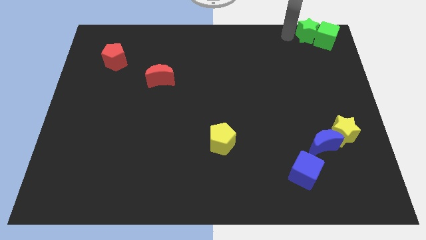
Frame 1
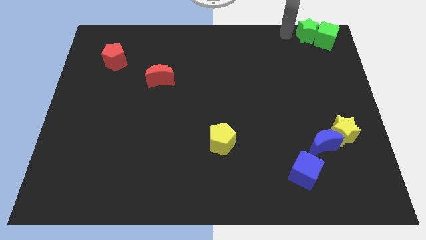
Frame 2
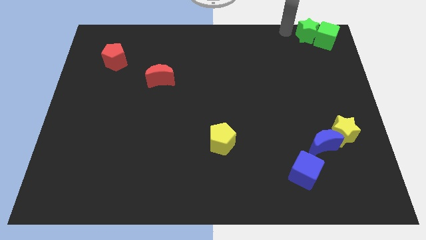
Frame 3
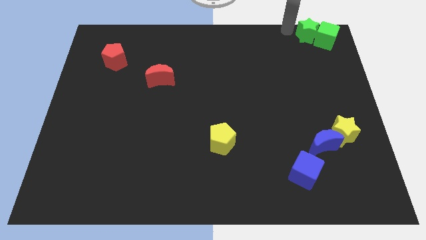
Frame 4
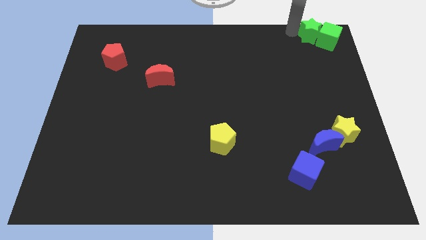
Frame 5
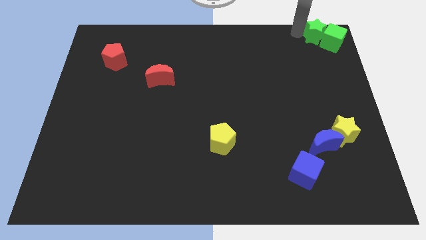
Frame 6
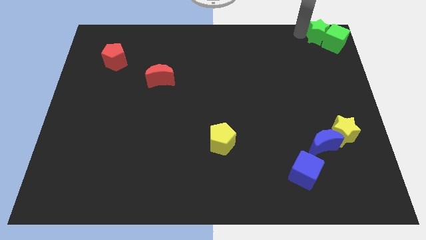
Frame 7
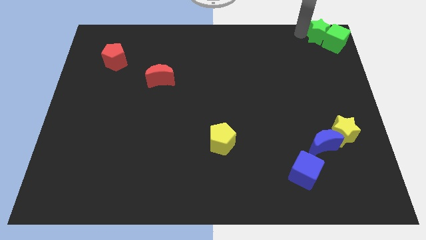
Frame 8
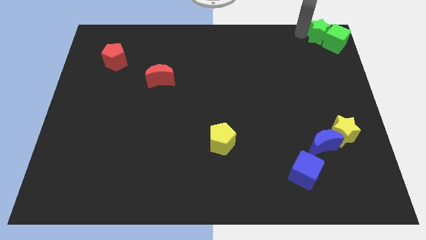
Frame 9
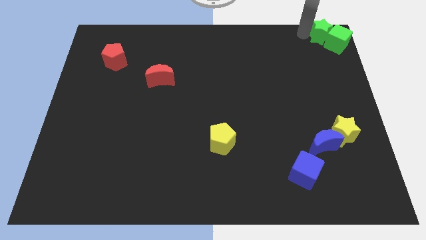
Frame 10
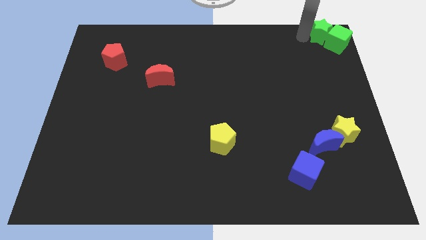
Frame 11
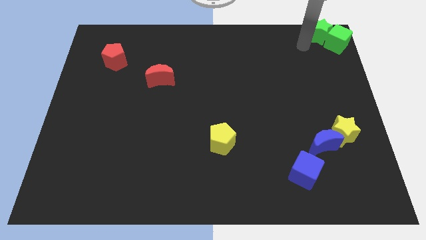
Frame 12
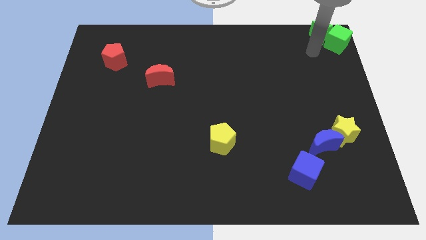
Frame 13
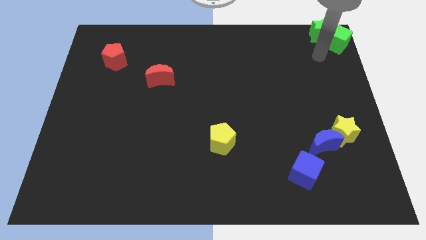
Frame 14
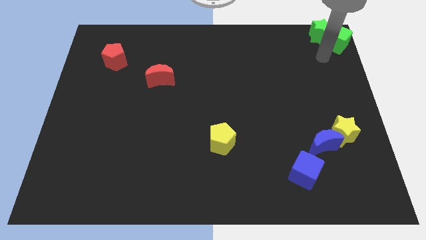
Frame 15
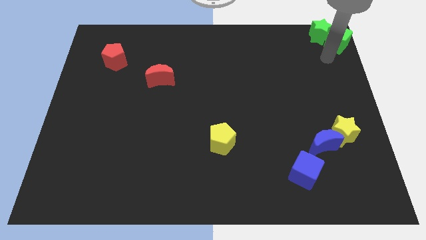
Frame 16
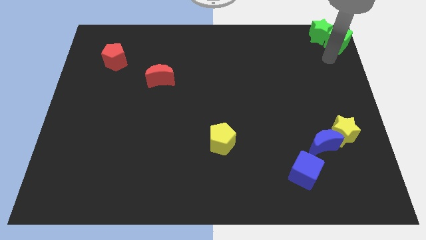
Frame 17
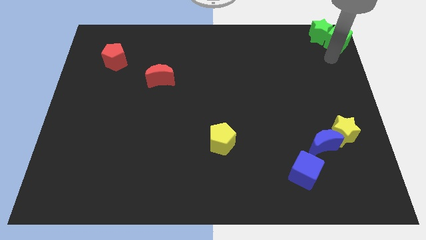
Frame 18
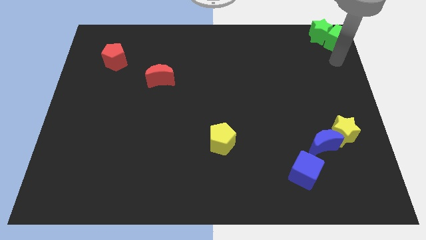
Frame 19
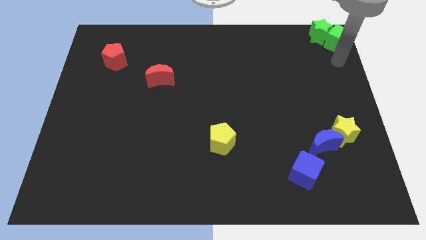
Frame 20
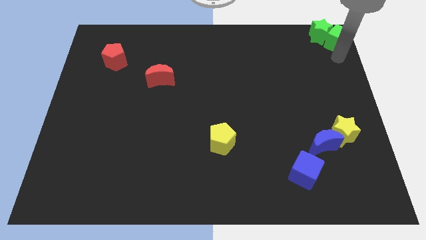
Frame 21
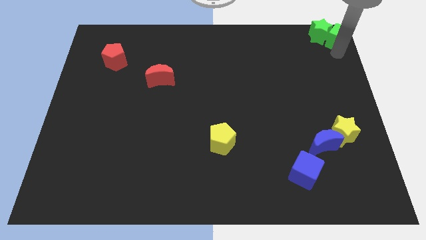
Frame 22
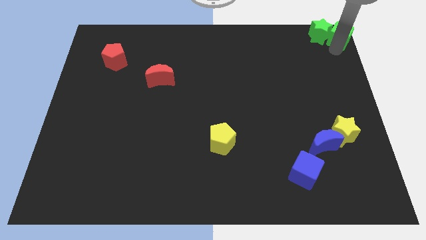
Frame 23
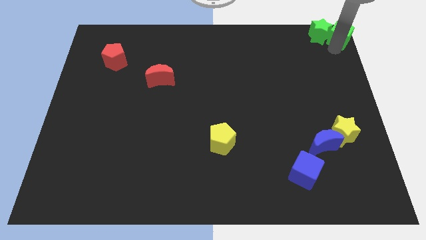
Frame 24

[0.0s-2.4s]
push the green blocks to the top right corner of the board

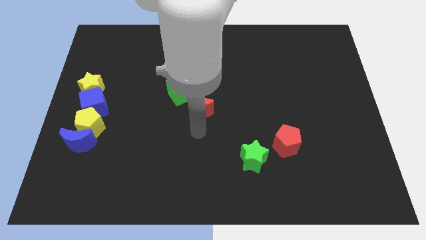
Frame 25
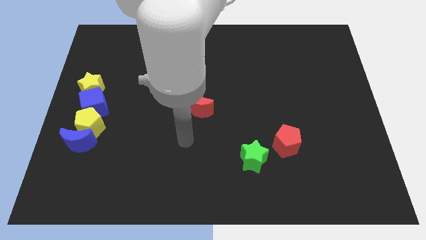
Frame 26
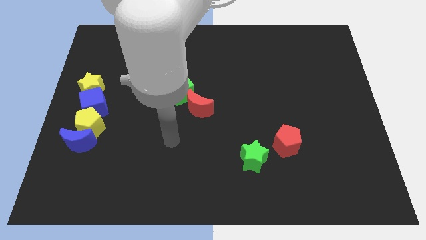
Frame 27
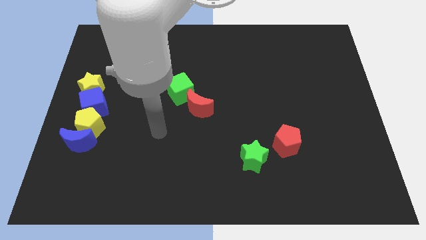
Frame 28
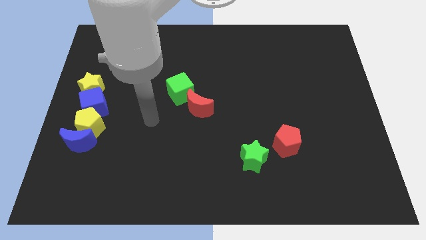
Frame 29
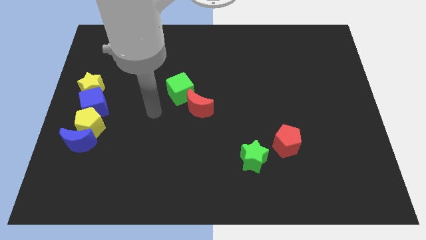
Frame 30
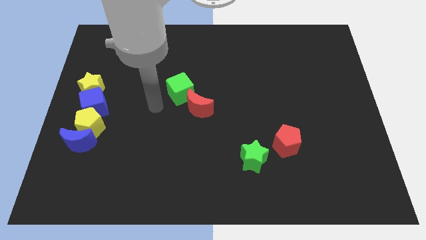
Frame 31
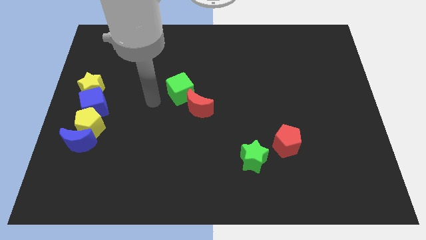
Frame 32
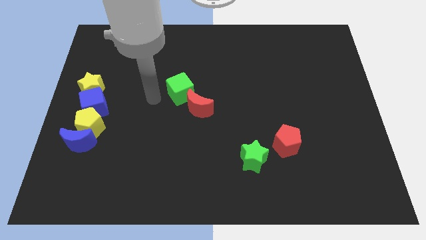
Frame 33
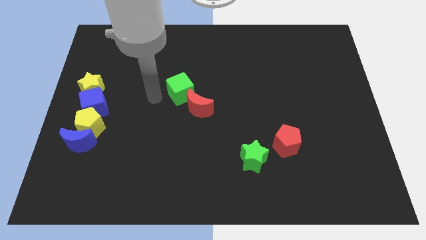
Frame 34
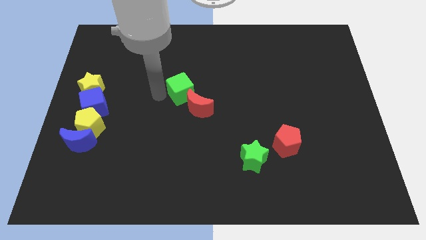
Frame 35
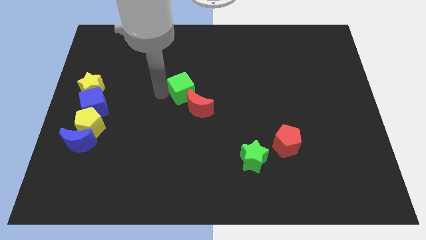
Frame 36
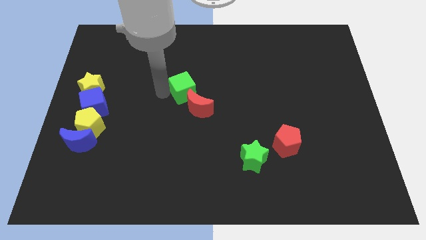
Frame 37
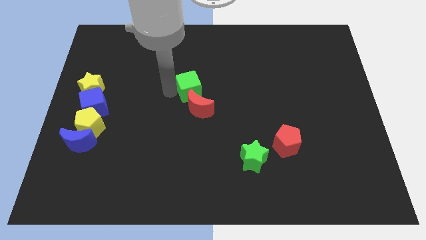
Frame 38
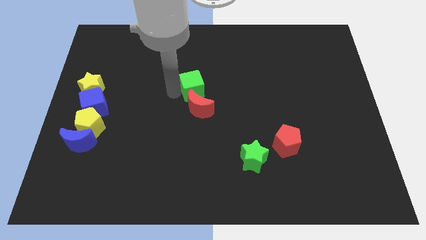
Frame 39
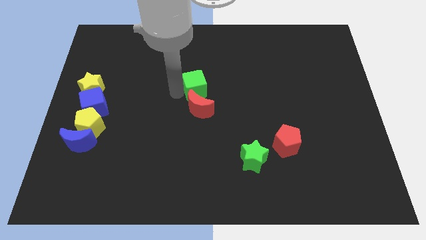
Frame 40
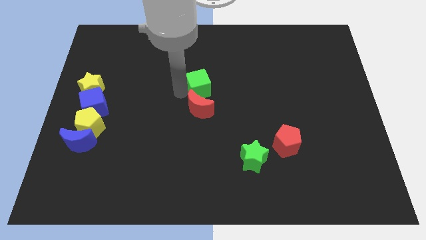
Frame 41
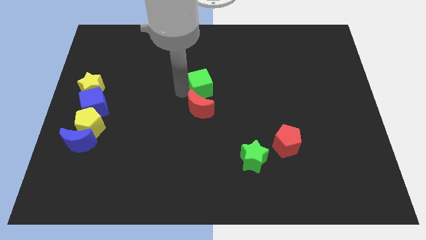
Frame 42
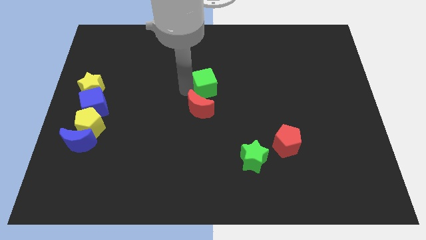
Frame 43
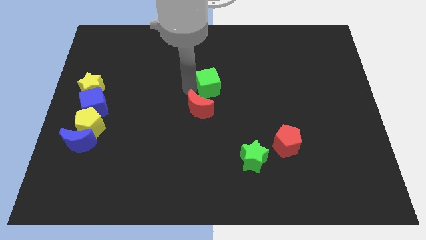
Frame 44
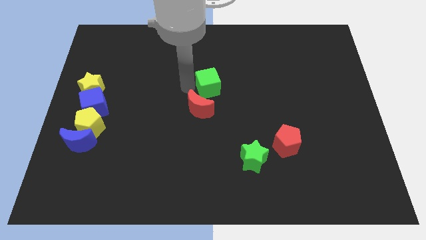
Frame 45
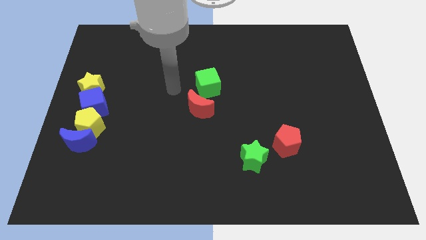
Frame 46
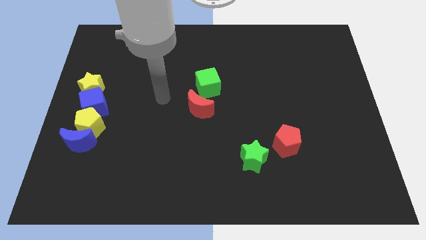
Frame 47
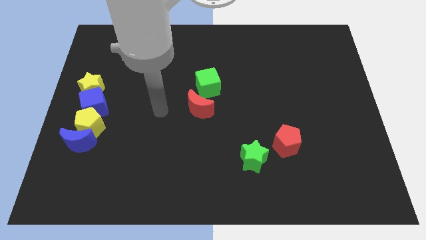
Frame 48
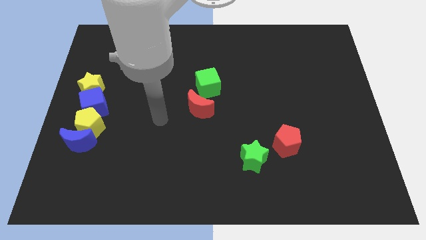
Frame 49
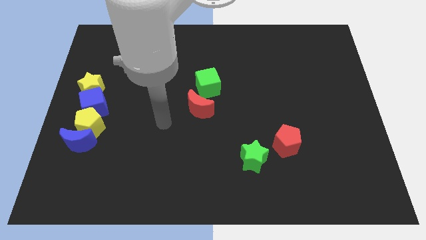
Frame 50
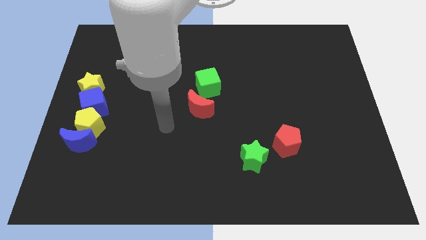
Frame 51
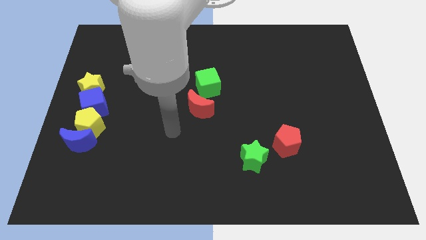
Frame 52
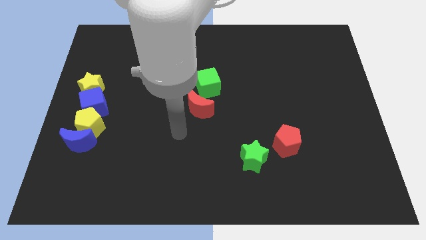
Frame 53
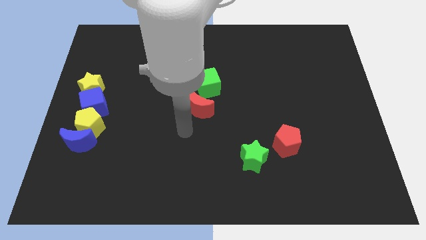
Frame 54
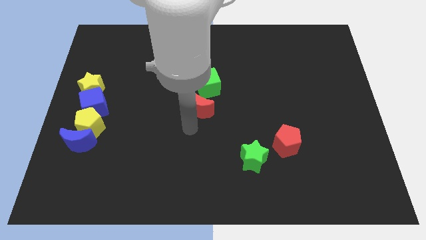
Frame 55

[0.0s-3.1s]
slide the green cube slightly towards the center

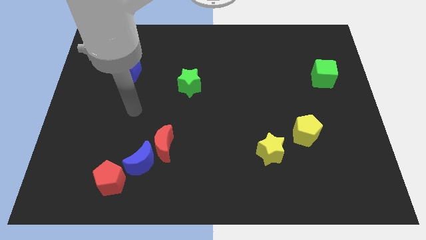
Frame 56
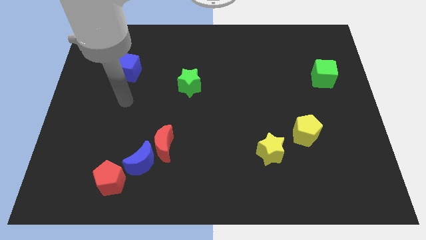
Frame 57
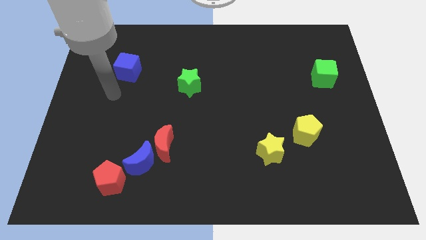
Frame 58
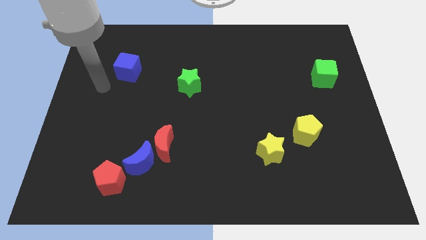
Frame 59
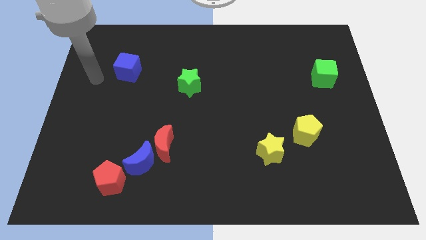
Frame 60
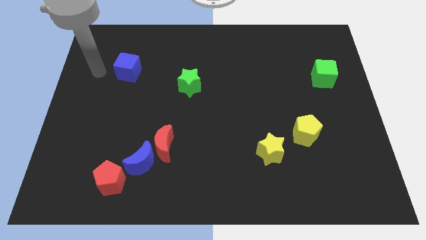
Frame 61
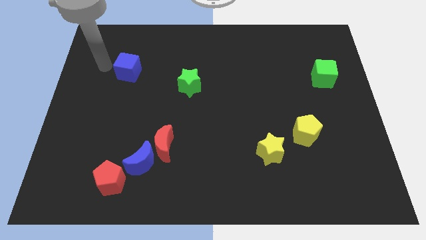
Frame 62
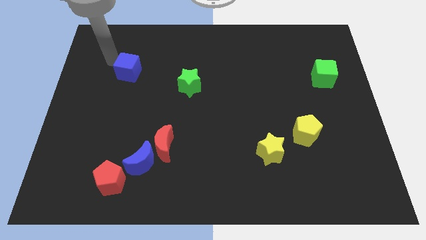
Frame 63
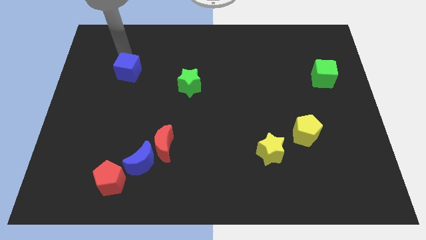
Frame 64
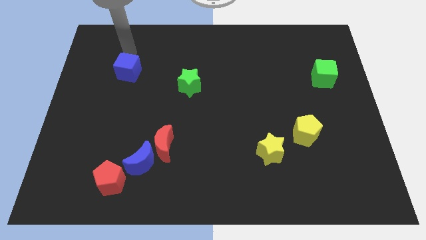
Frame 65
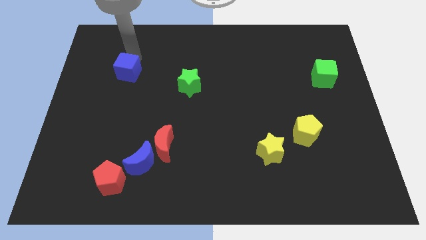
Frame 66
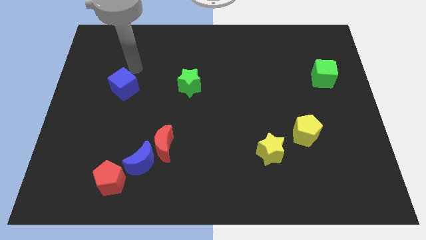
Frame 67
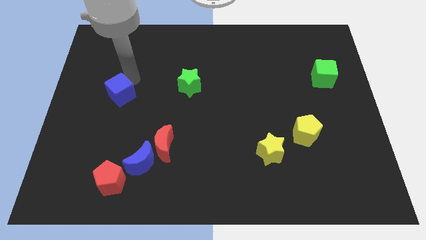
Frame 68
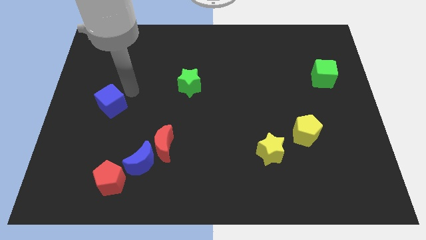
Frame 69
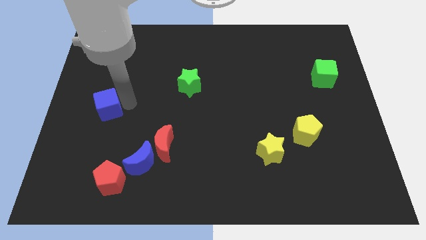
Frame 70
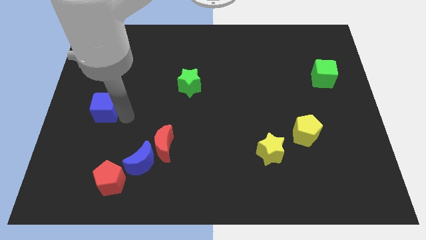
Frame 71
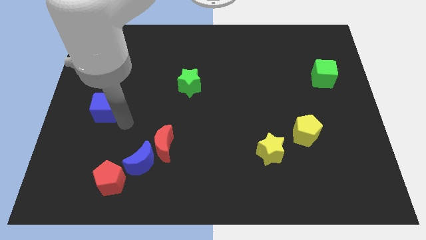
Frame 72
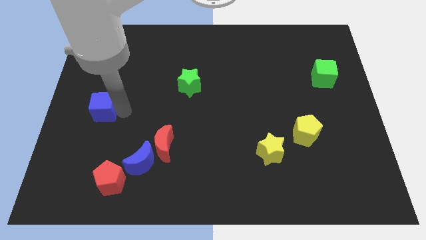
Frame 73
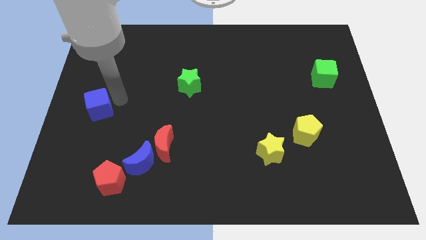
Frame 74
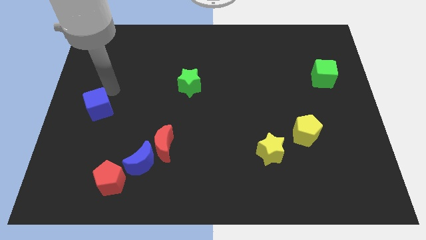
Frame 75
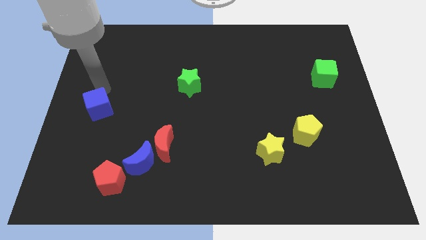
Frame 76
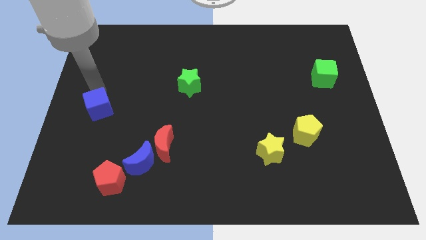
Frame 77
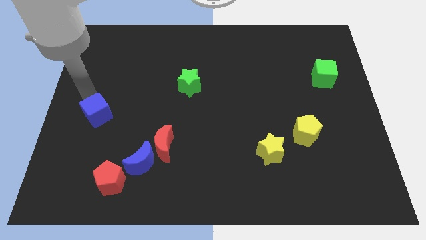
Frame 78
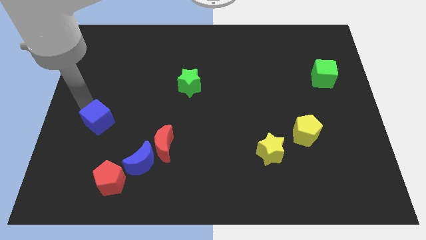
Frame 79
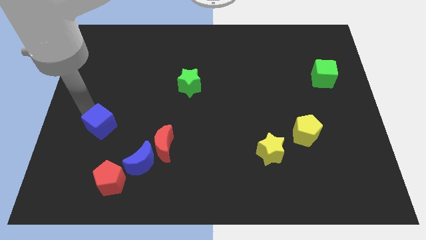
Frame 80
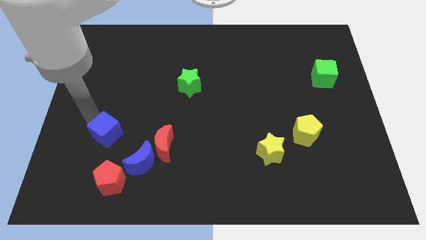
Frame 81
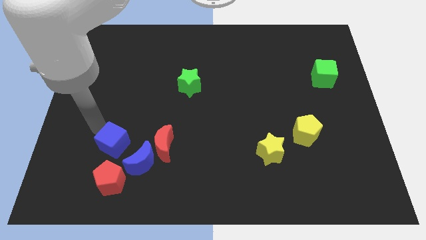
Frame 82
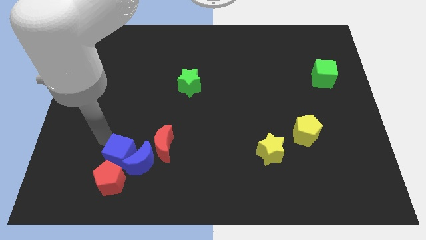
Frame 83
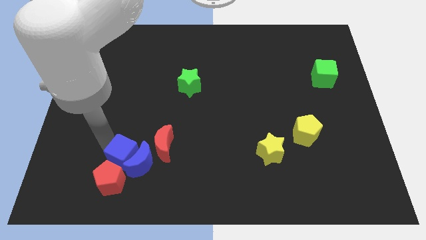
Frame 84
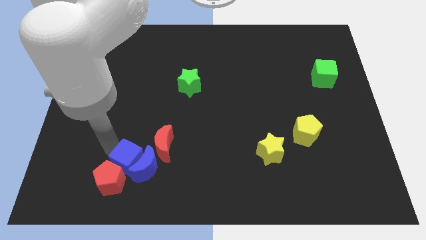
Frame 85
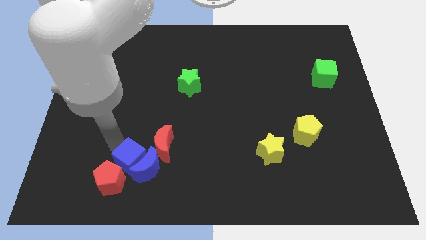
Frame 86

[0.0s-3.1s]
slide the blue cube into the blue moon

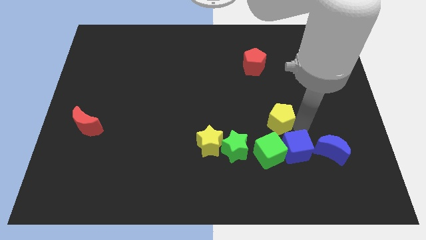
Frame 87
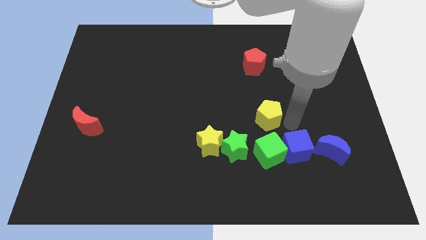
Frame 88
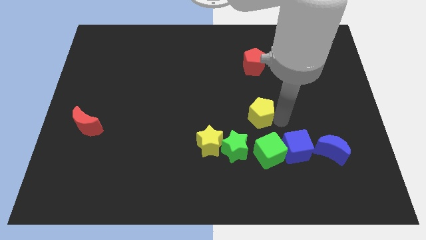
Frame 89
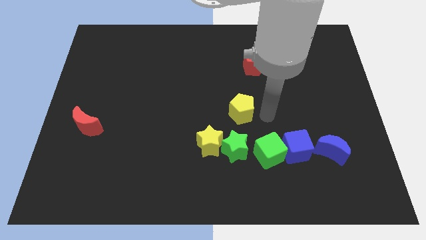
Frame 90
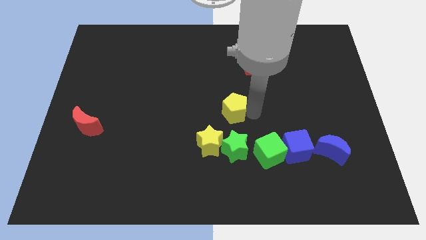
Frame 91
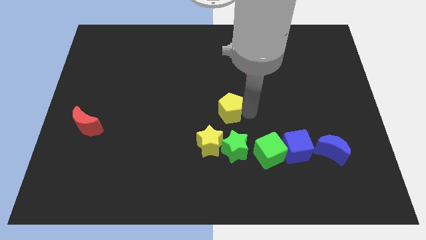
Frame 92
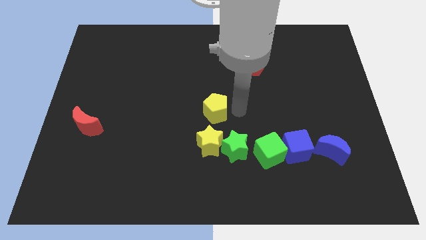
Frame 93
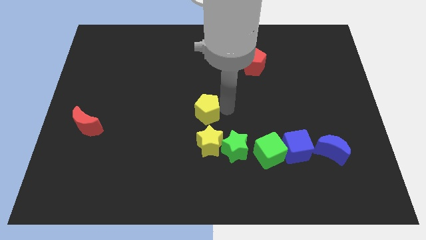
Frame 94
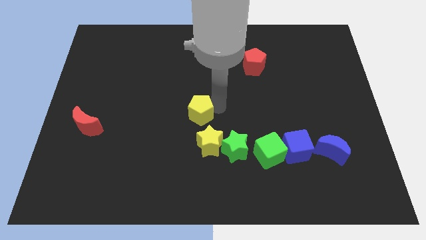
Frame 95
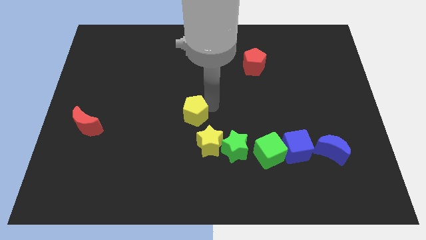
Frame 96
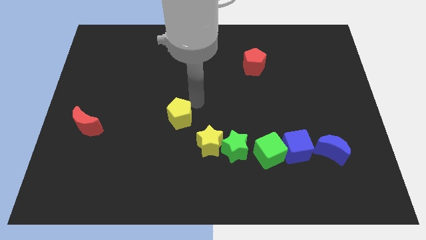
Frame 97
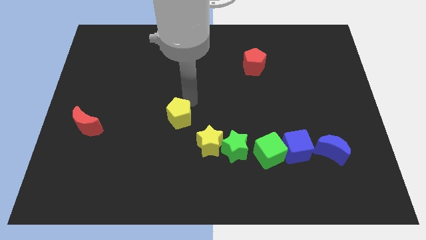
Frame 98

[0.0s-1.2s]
slide the yellow pentagon slightly to the left
